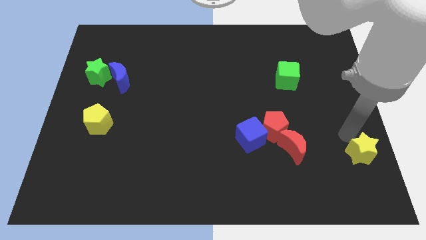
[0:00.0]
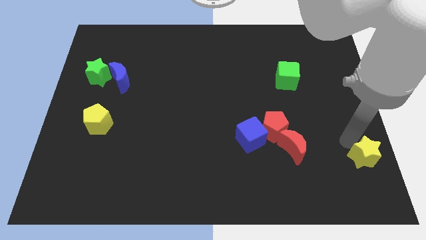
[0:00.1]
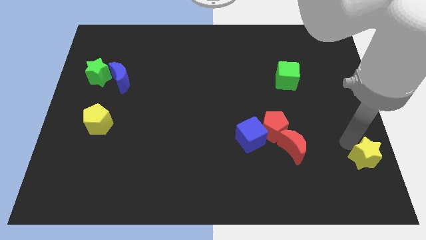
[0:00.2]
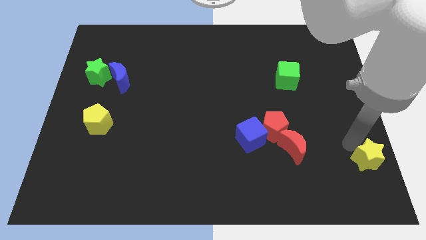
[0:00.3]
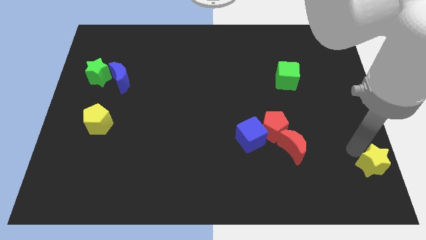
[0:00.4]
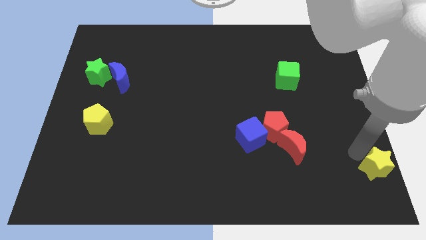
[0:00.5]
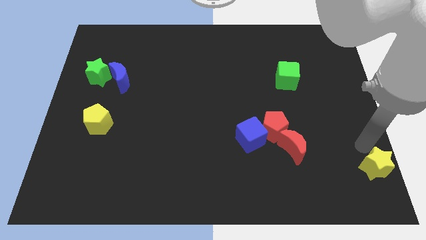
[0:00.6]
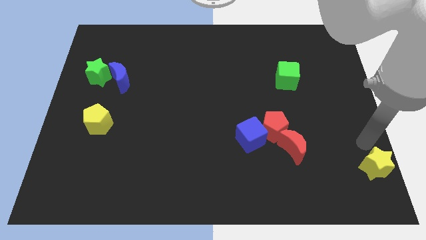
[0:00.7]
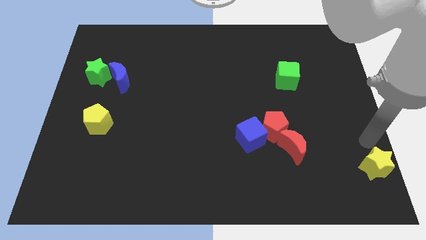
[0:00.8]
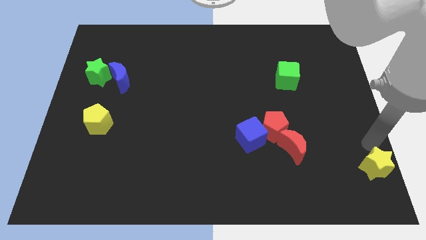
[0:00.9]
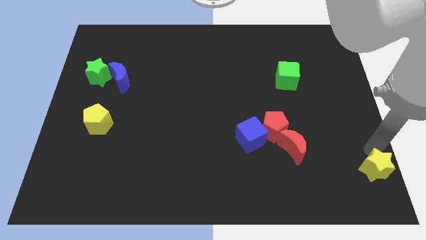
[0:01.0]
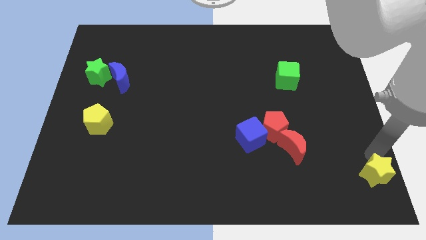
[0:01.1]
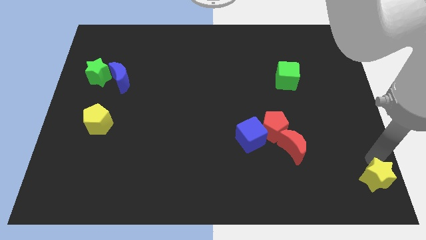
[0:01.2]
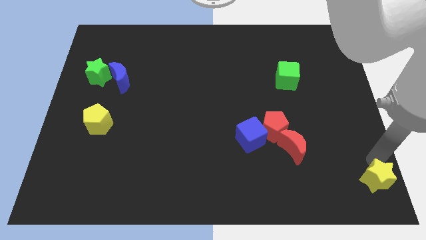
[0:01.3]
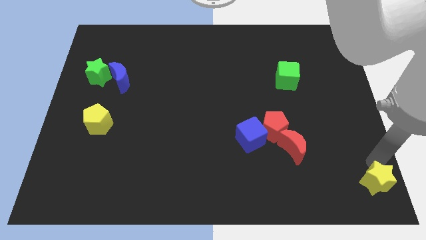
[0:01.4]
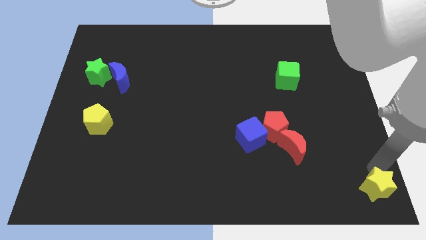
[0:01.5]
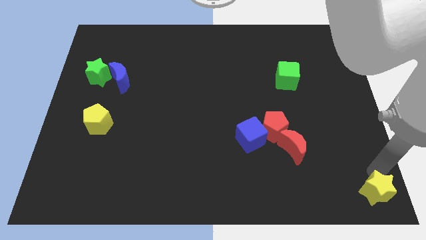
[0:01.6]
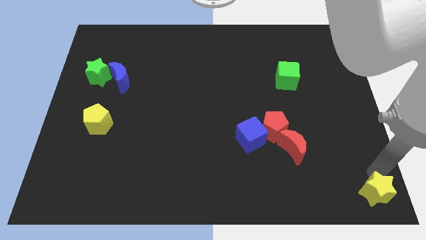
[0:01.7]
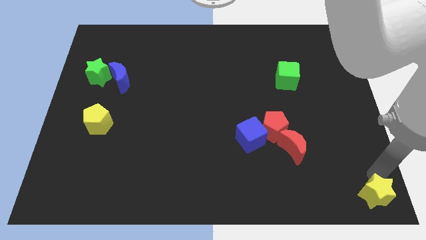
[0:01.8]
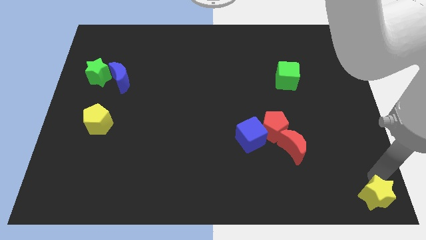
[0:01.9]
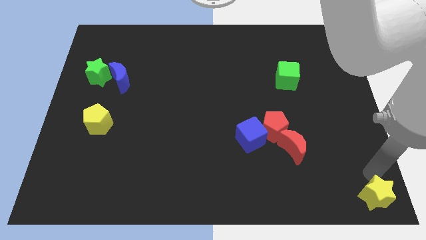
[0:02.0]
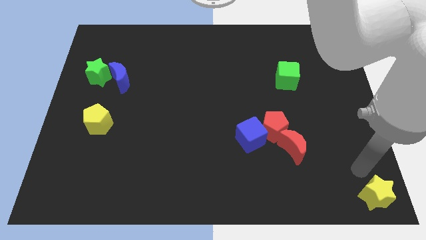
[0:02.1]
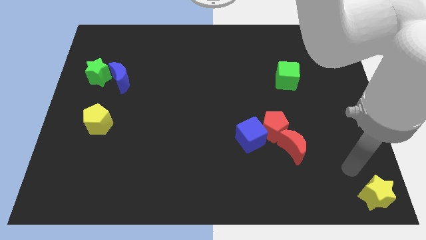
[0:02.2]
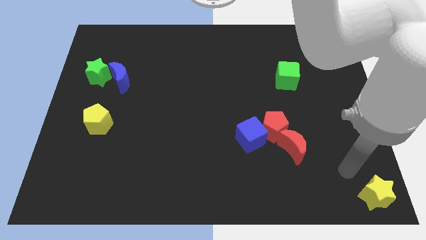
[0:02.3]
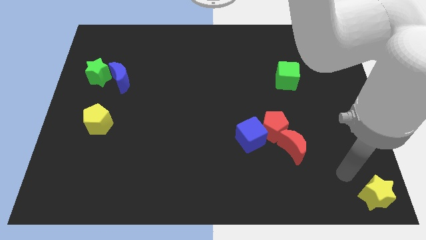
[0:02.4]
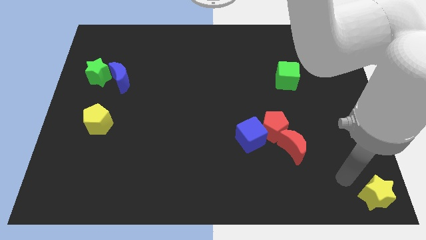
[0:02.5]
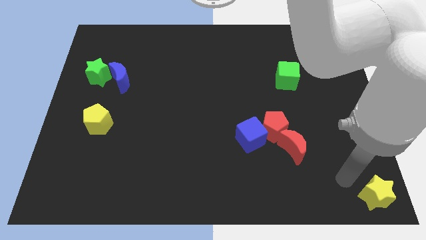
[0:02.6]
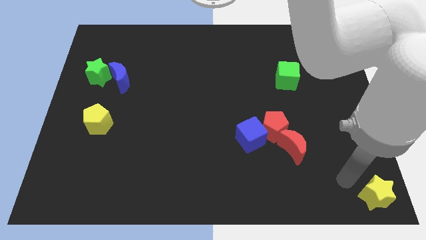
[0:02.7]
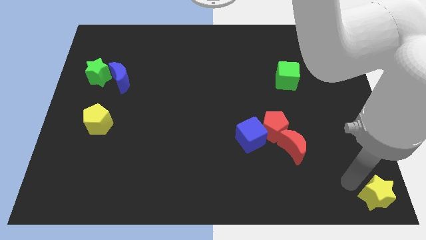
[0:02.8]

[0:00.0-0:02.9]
push the yellow star at bottom right

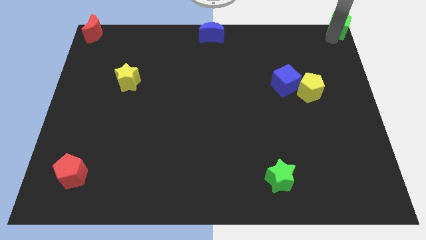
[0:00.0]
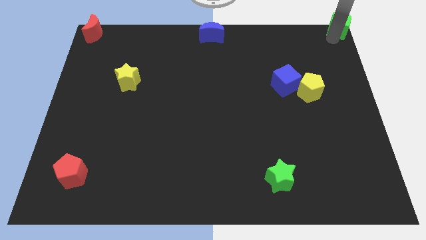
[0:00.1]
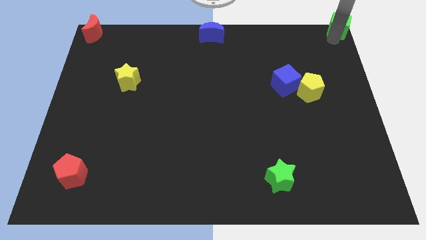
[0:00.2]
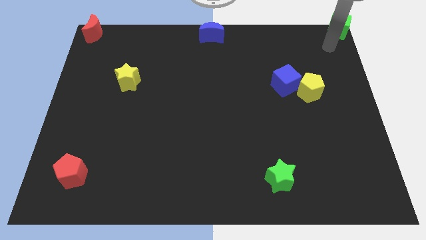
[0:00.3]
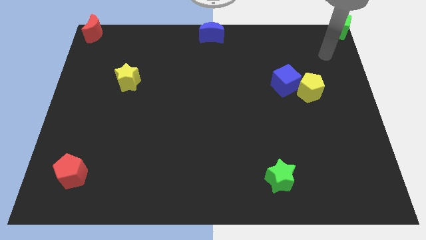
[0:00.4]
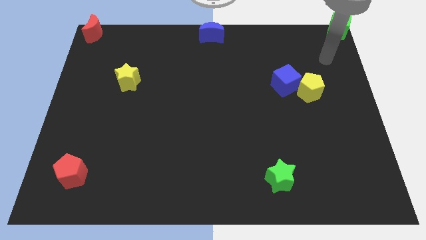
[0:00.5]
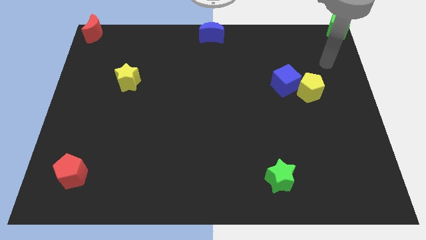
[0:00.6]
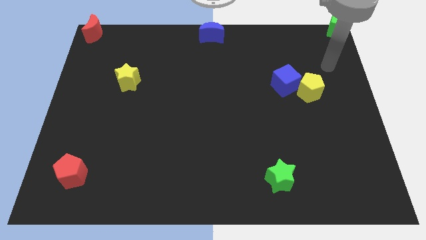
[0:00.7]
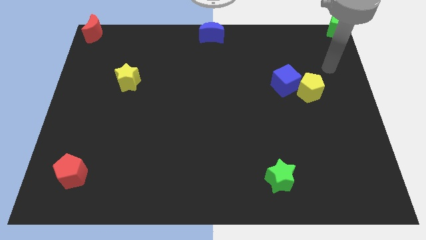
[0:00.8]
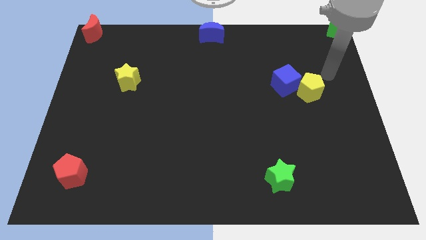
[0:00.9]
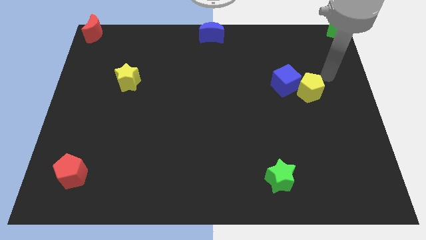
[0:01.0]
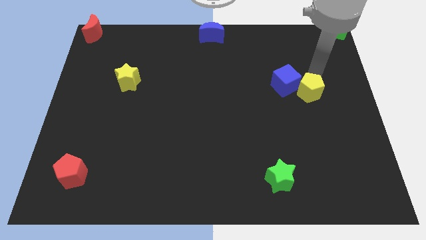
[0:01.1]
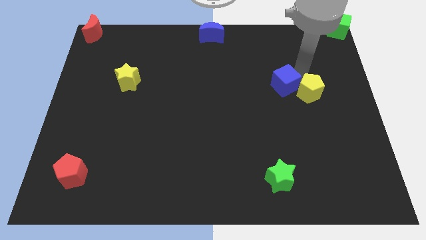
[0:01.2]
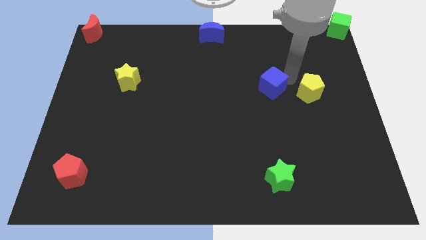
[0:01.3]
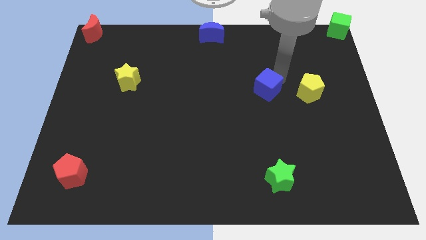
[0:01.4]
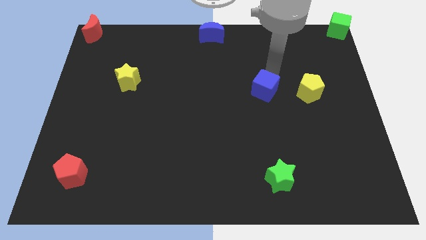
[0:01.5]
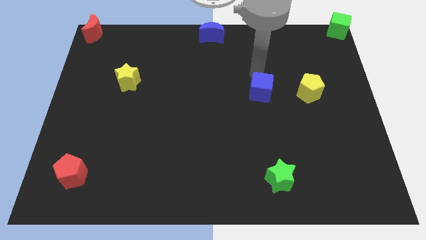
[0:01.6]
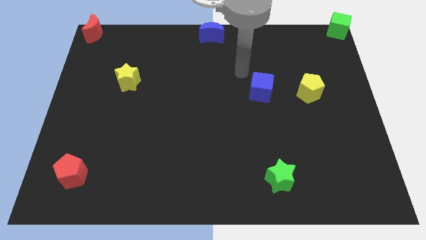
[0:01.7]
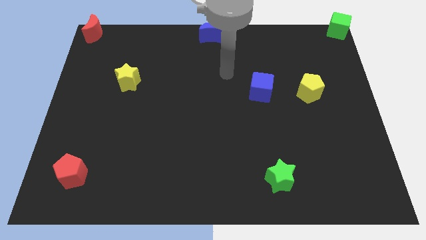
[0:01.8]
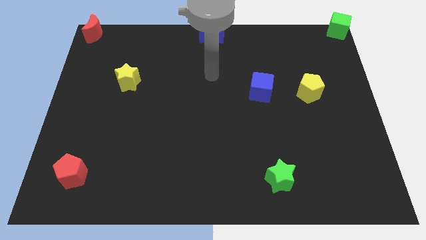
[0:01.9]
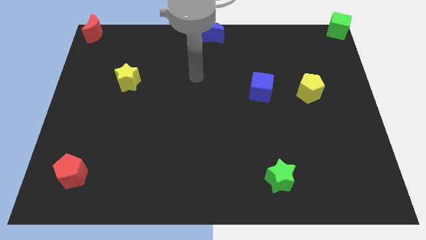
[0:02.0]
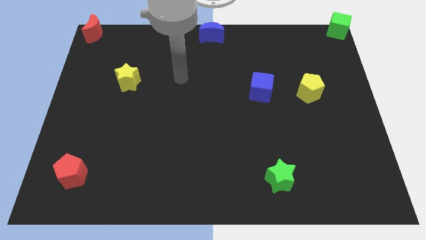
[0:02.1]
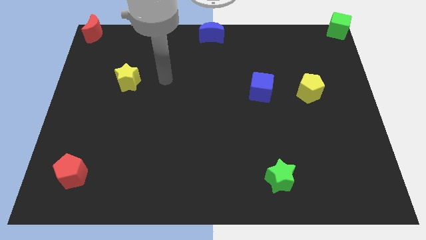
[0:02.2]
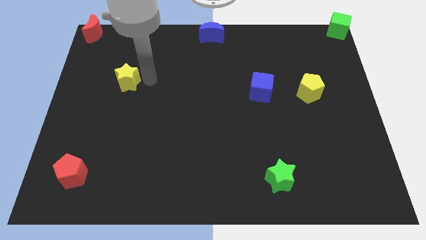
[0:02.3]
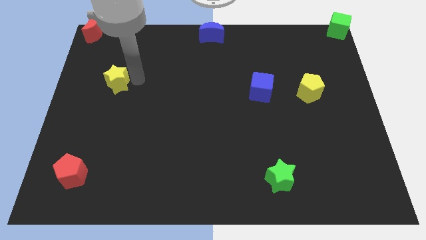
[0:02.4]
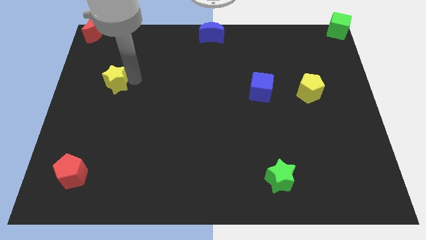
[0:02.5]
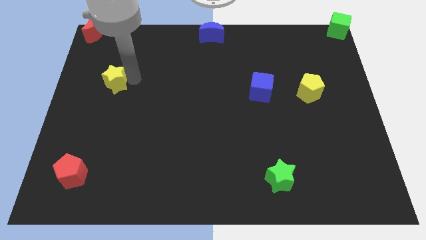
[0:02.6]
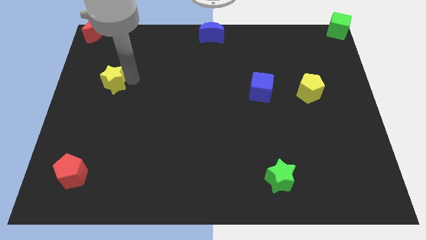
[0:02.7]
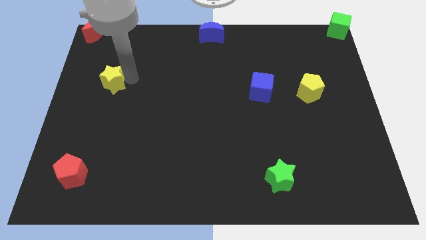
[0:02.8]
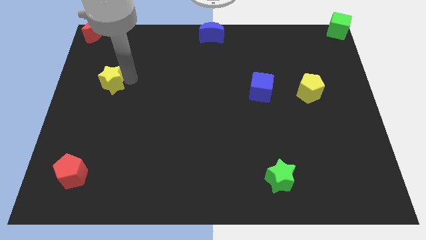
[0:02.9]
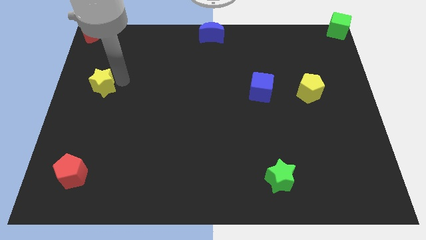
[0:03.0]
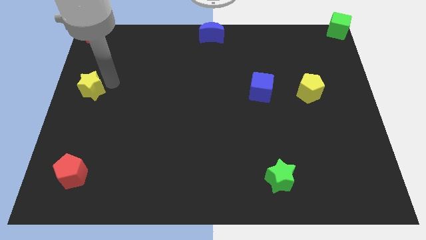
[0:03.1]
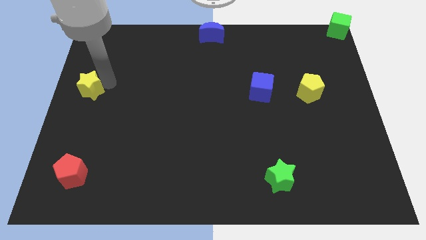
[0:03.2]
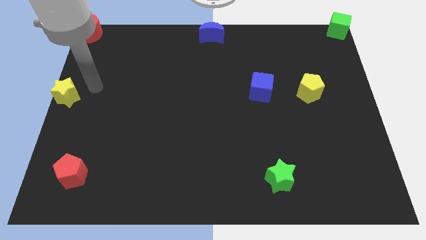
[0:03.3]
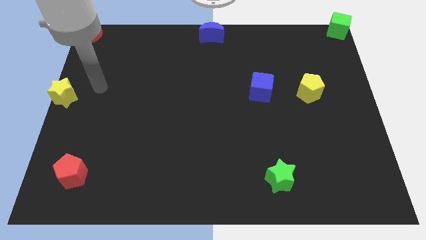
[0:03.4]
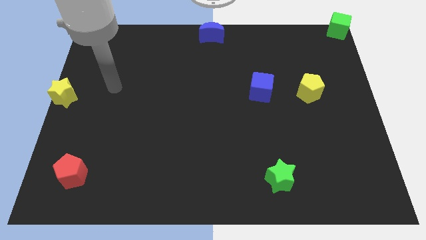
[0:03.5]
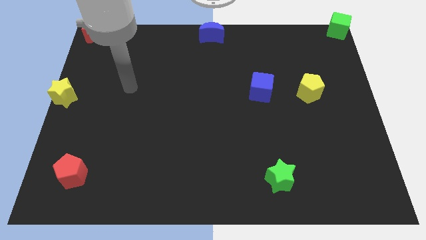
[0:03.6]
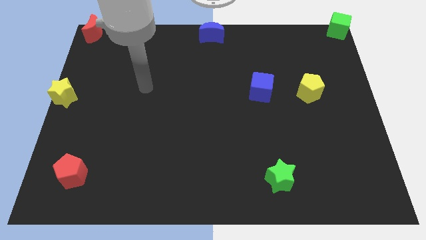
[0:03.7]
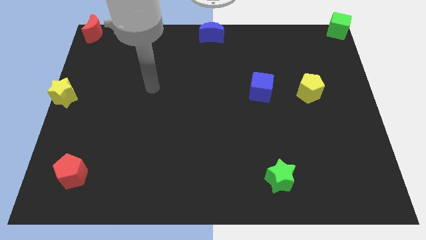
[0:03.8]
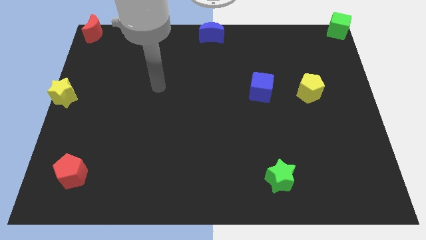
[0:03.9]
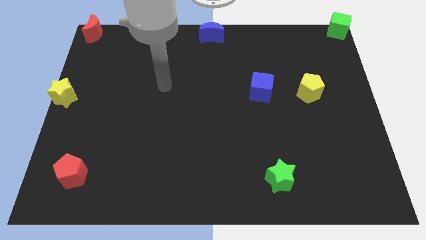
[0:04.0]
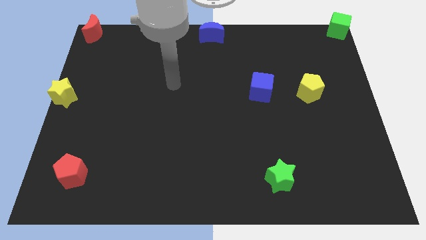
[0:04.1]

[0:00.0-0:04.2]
place the yellow star at the center left of the board

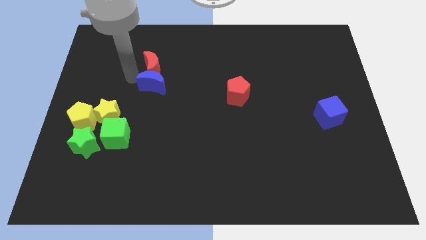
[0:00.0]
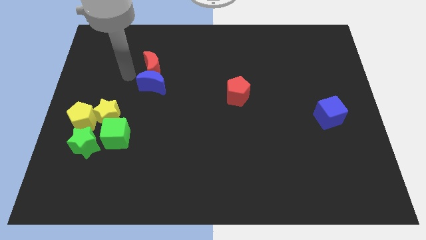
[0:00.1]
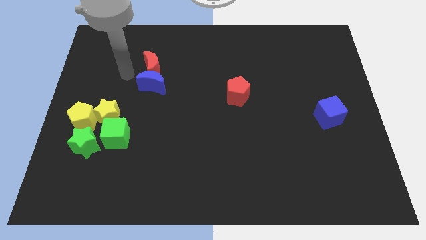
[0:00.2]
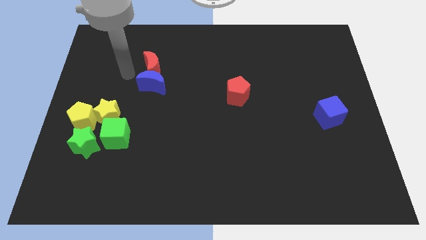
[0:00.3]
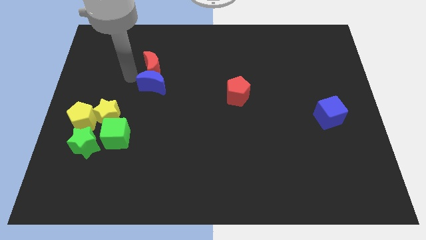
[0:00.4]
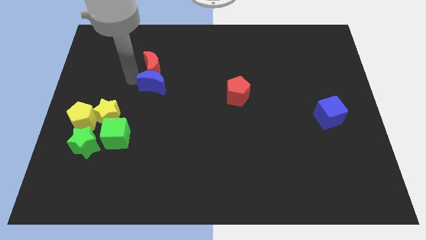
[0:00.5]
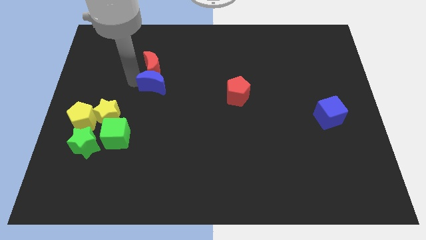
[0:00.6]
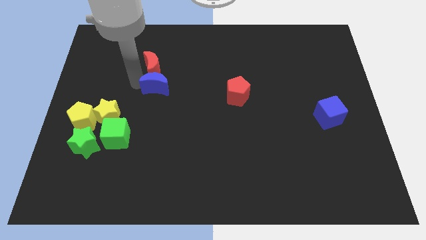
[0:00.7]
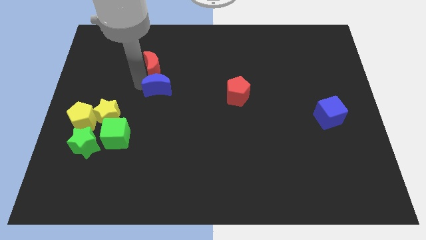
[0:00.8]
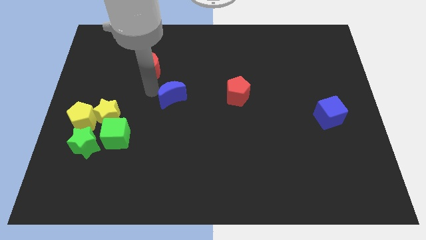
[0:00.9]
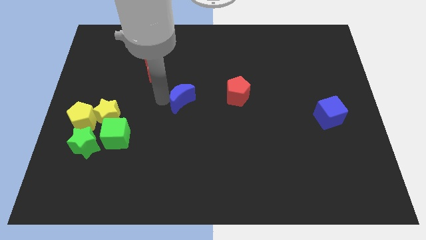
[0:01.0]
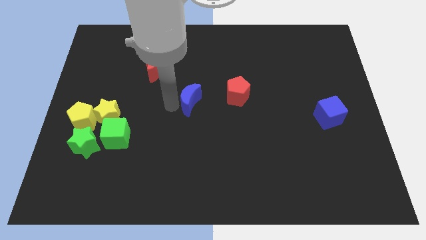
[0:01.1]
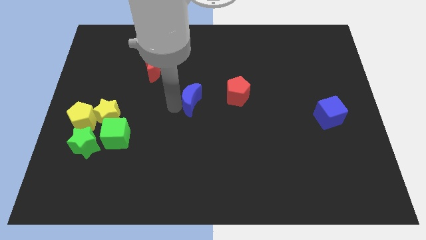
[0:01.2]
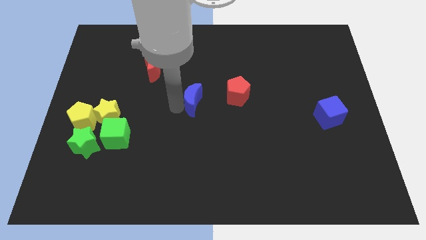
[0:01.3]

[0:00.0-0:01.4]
push the blue crescent to the left of the red pentagon

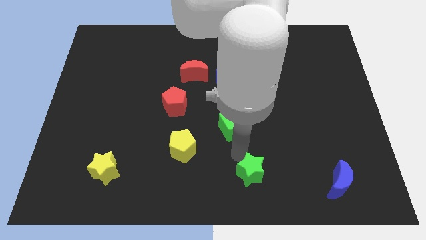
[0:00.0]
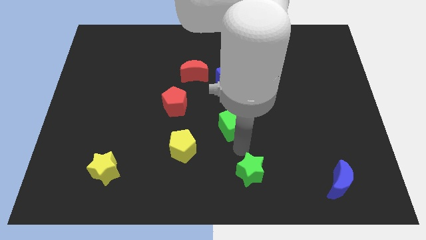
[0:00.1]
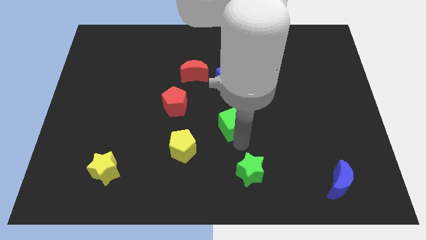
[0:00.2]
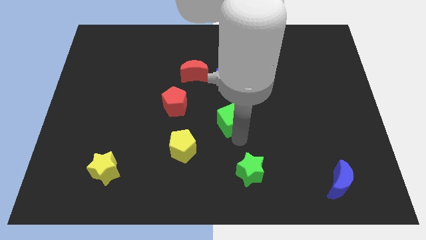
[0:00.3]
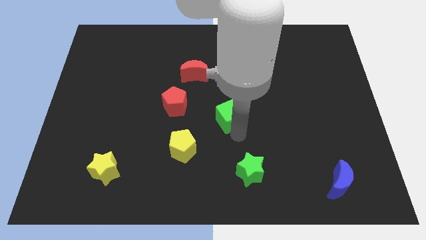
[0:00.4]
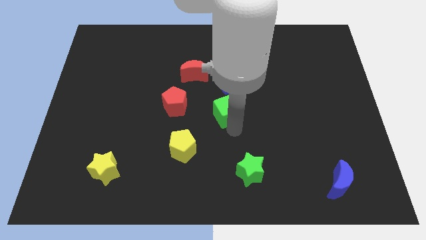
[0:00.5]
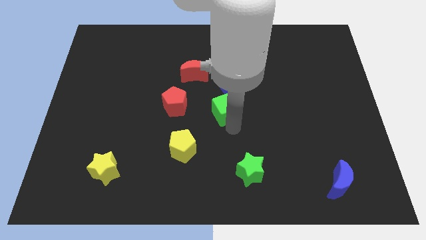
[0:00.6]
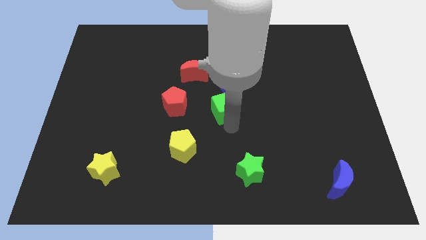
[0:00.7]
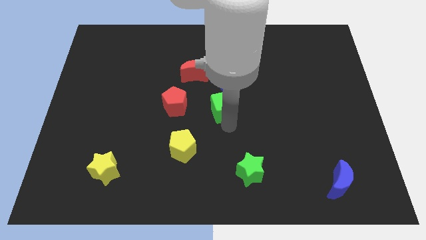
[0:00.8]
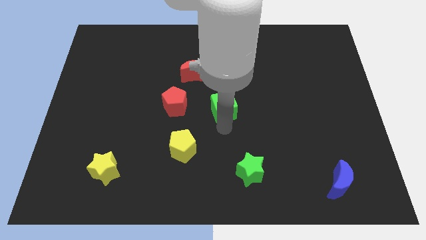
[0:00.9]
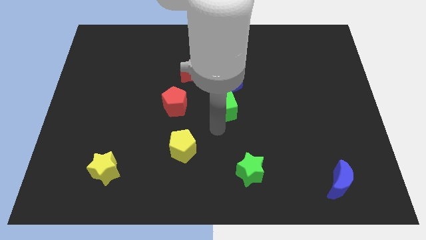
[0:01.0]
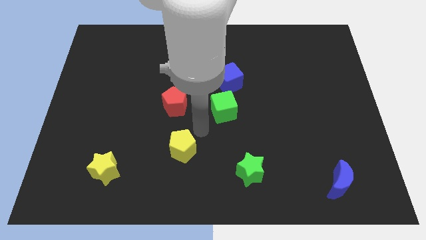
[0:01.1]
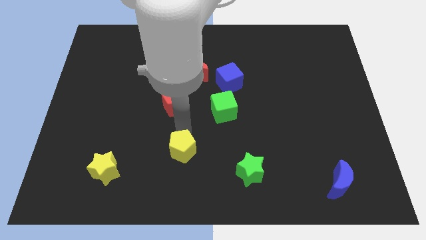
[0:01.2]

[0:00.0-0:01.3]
push the green cube to the right of the red pentagon
